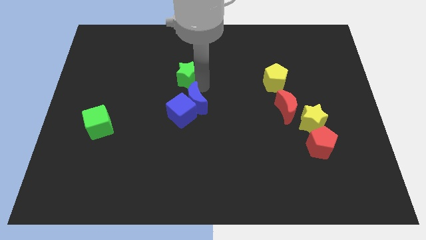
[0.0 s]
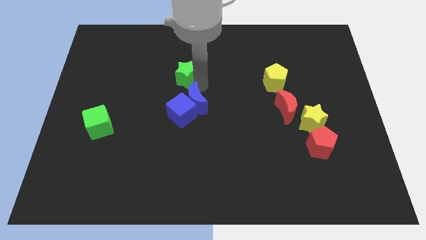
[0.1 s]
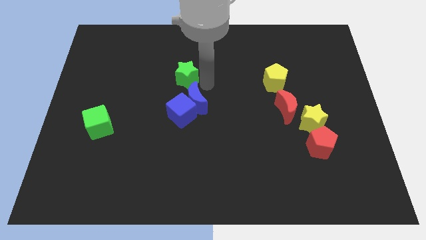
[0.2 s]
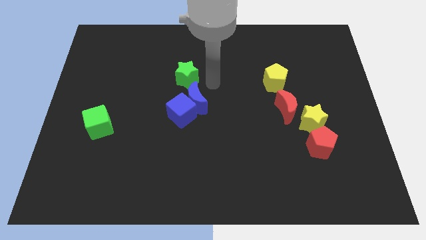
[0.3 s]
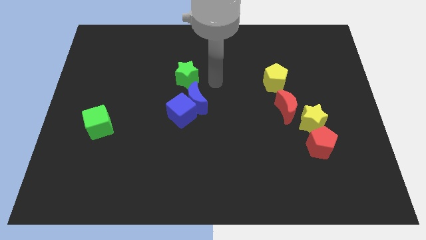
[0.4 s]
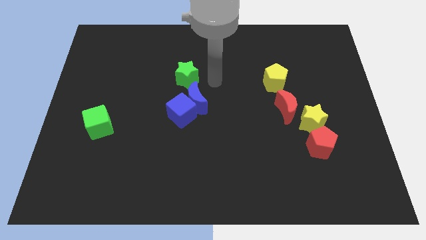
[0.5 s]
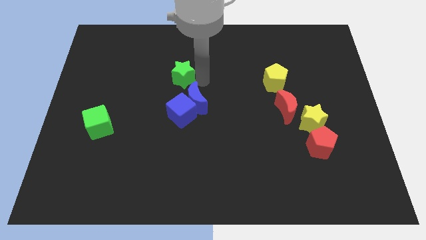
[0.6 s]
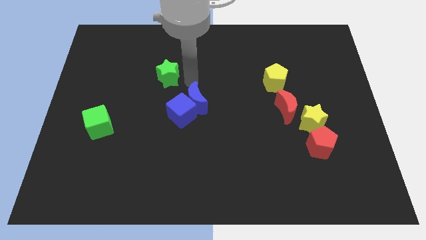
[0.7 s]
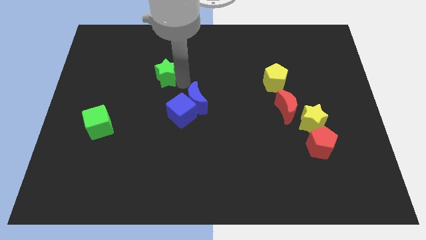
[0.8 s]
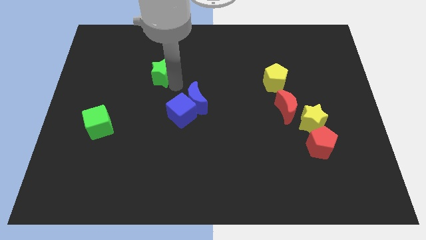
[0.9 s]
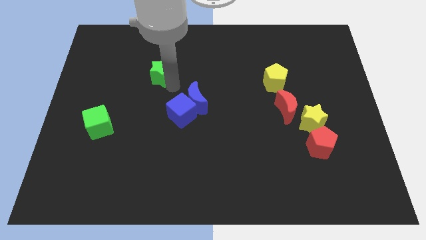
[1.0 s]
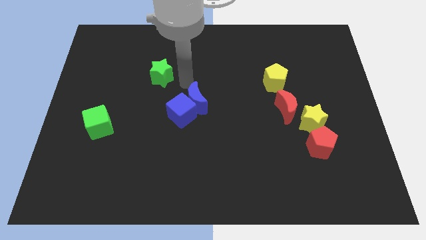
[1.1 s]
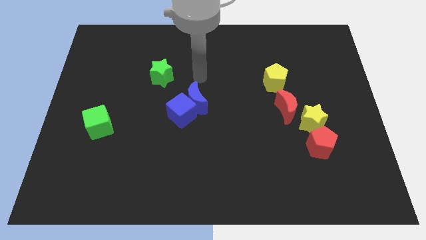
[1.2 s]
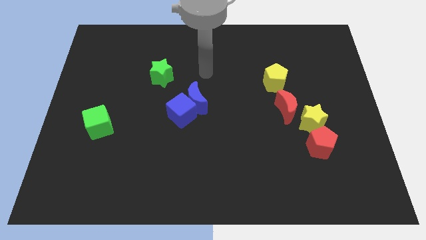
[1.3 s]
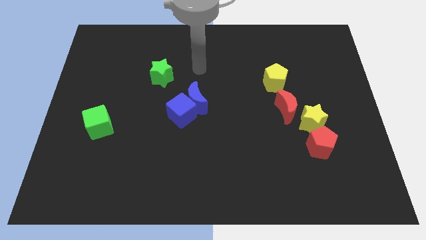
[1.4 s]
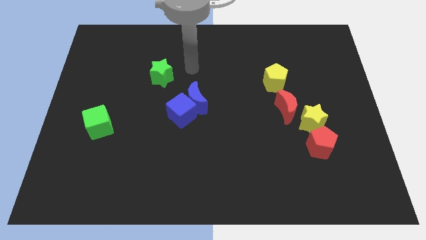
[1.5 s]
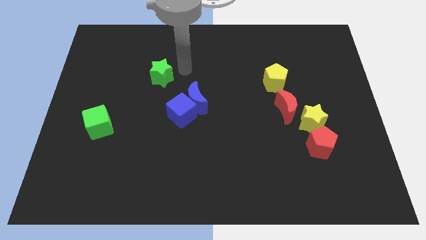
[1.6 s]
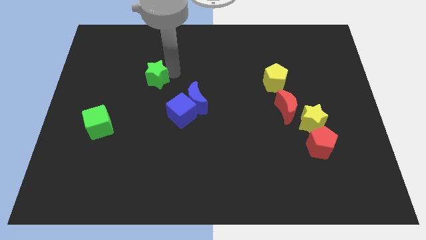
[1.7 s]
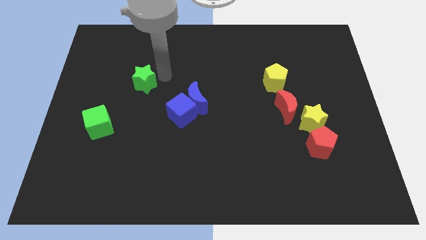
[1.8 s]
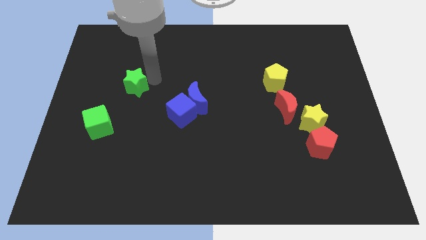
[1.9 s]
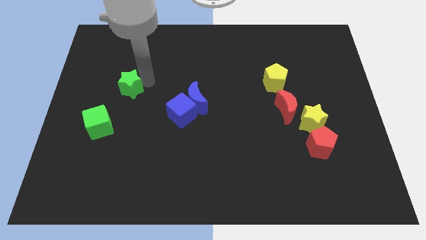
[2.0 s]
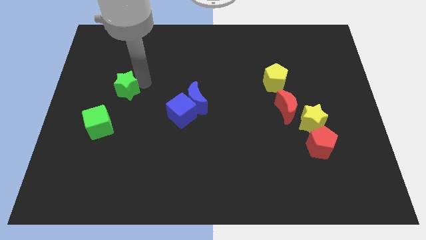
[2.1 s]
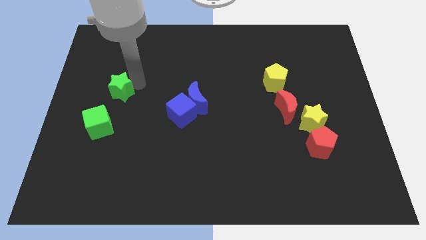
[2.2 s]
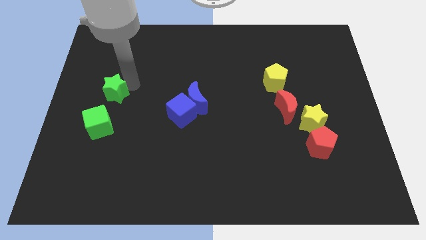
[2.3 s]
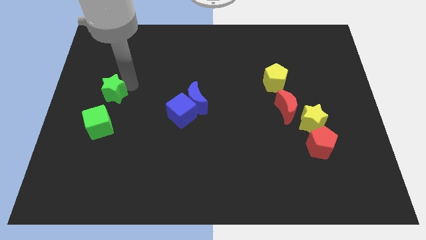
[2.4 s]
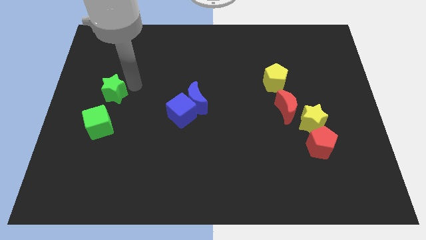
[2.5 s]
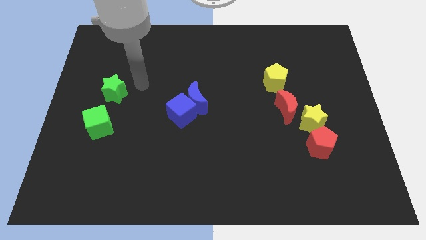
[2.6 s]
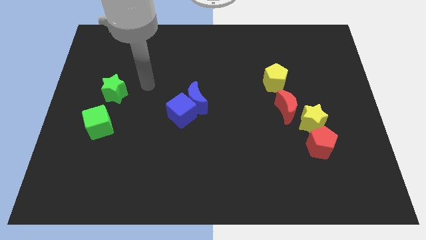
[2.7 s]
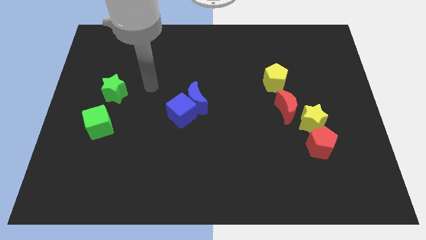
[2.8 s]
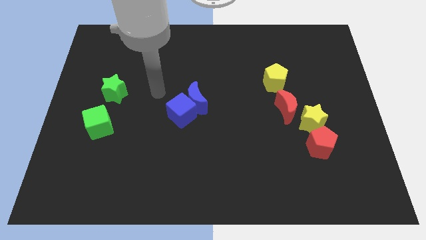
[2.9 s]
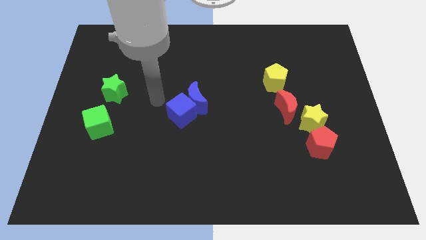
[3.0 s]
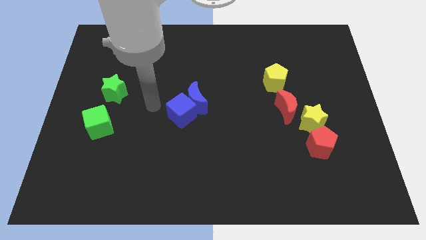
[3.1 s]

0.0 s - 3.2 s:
place green star on top of green cube

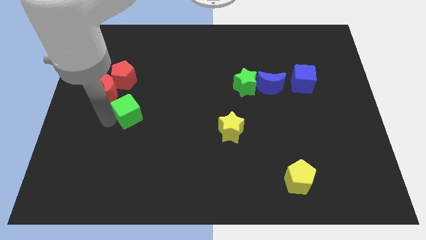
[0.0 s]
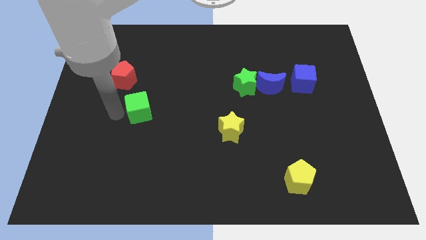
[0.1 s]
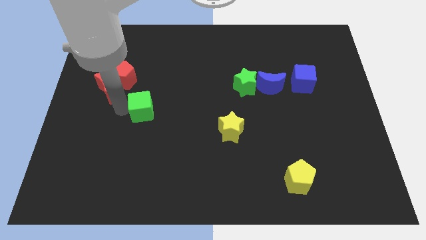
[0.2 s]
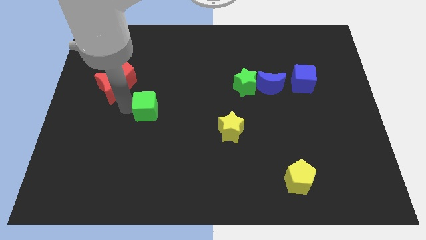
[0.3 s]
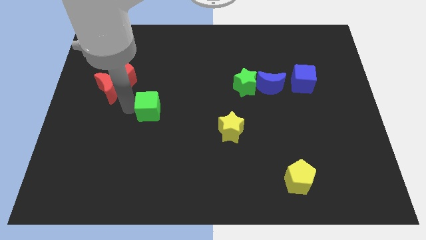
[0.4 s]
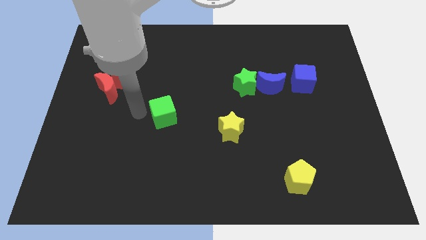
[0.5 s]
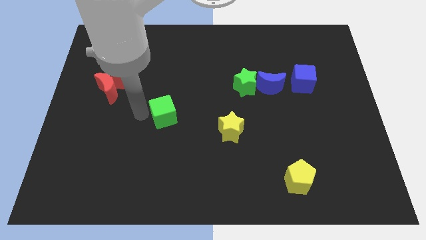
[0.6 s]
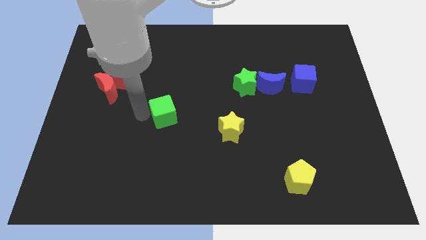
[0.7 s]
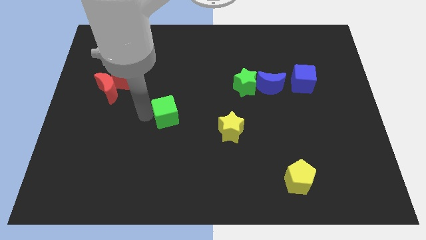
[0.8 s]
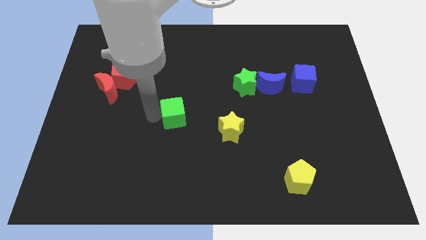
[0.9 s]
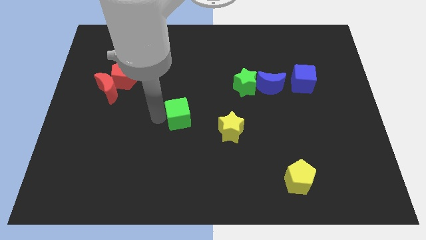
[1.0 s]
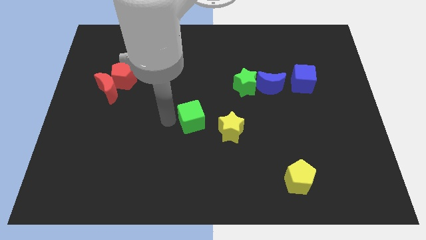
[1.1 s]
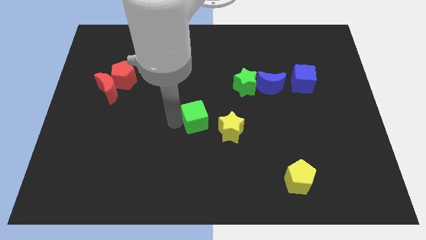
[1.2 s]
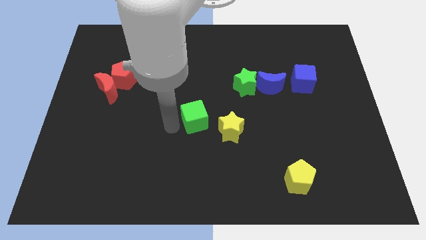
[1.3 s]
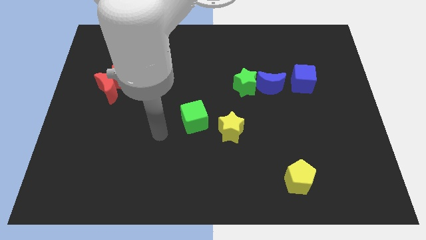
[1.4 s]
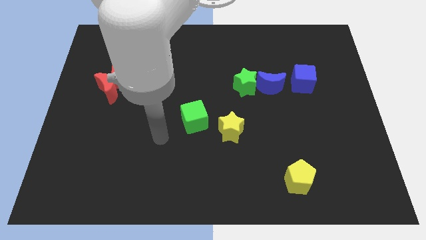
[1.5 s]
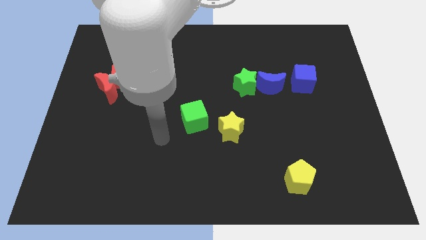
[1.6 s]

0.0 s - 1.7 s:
push the green cube to the top left side of the yellow star

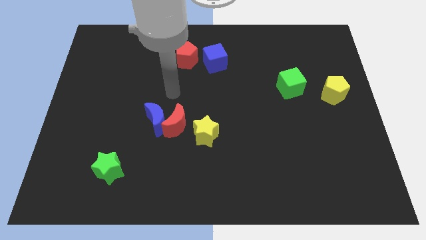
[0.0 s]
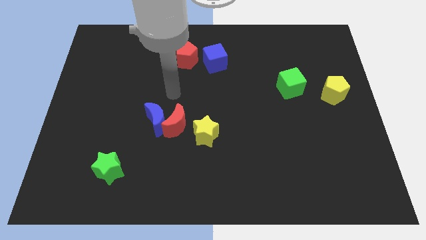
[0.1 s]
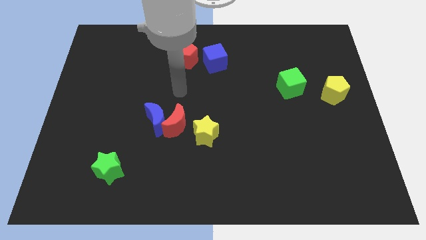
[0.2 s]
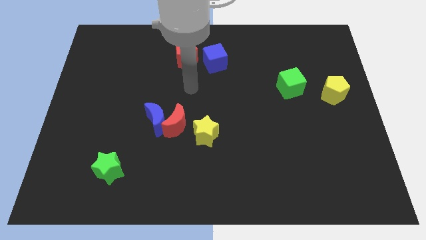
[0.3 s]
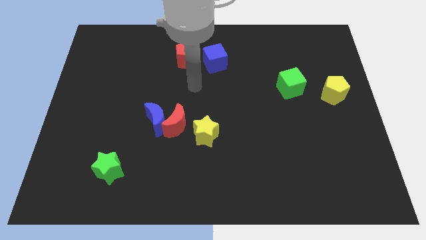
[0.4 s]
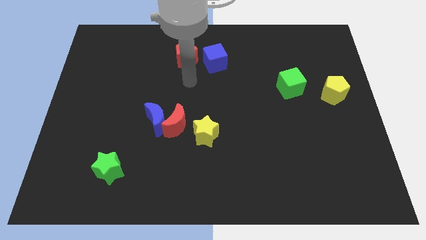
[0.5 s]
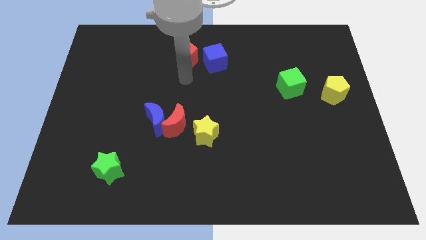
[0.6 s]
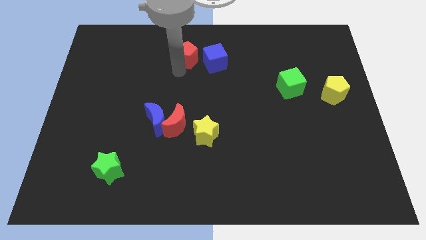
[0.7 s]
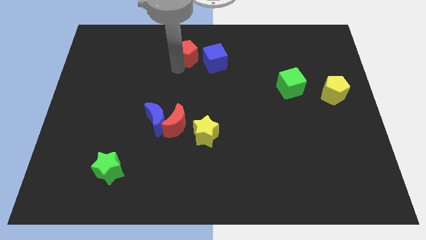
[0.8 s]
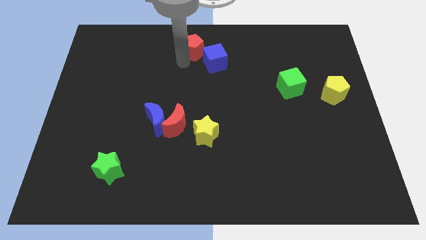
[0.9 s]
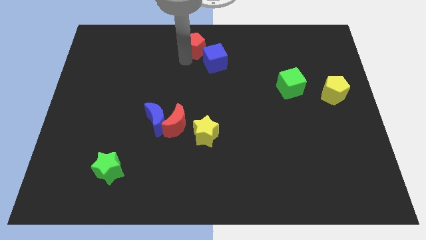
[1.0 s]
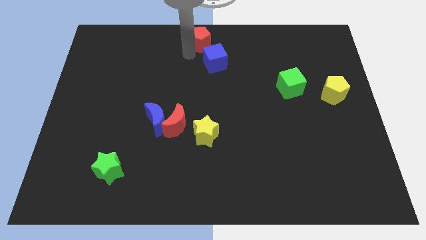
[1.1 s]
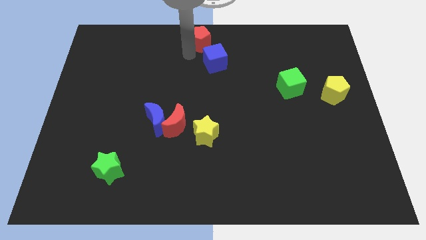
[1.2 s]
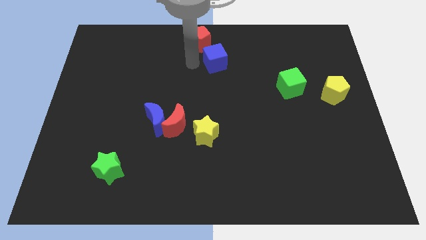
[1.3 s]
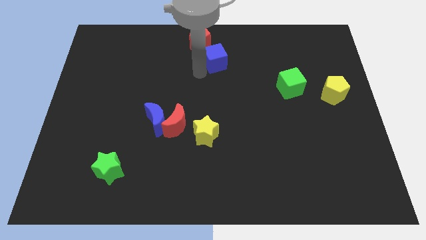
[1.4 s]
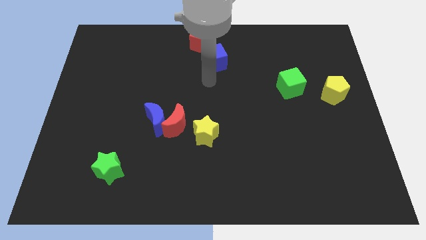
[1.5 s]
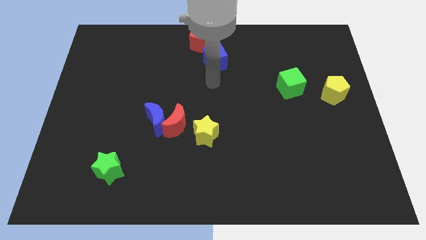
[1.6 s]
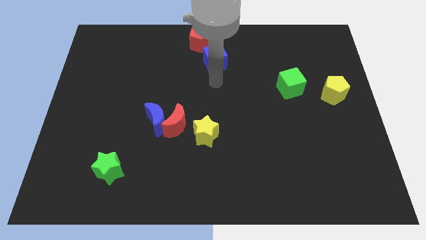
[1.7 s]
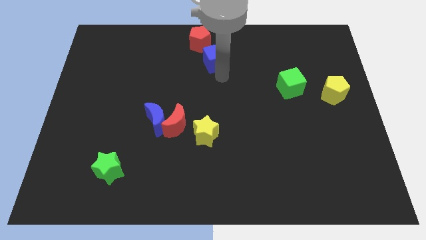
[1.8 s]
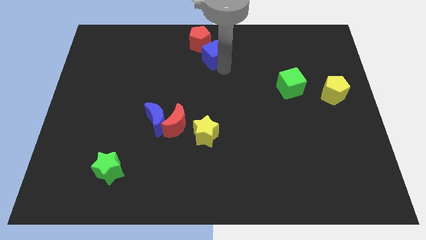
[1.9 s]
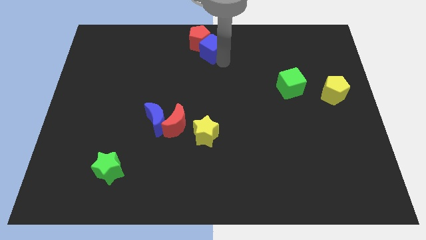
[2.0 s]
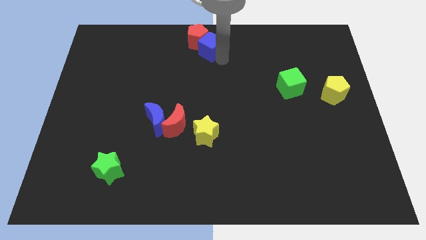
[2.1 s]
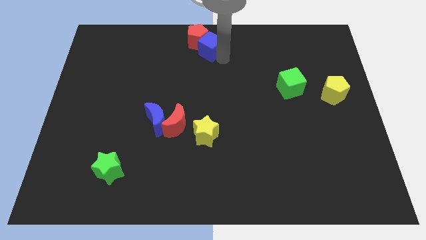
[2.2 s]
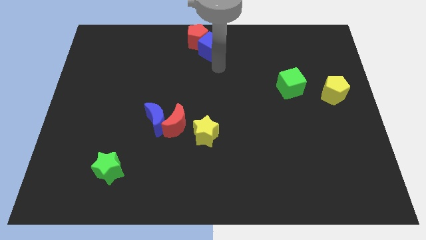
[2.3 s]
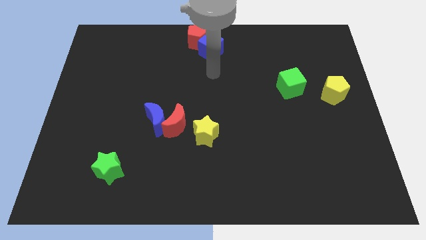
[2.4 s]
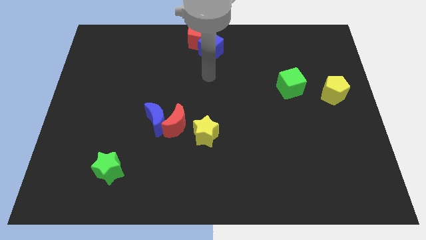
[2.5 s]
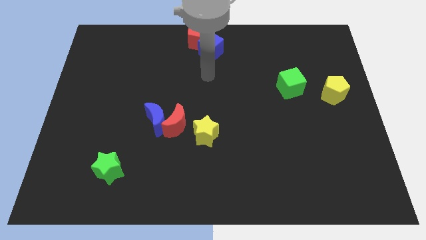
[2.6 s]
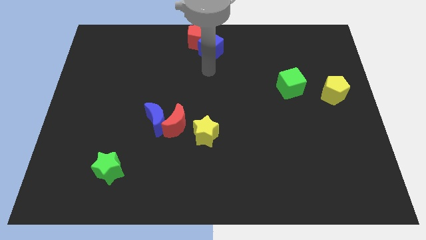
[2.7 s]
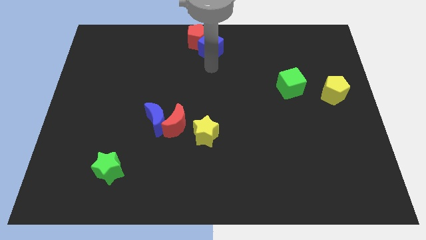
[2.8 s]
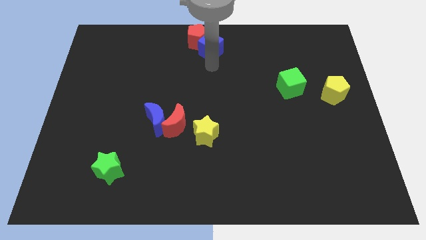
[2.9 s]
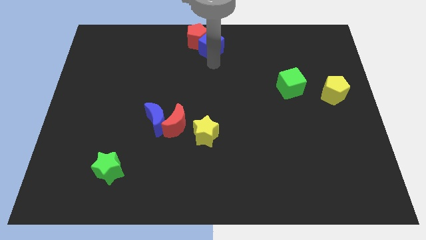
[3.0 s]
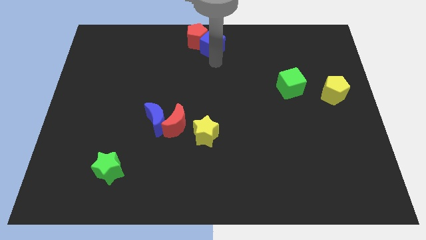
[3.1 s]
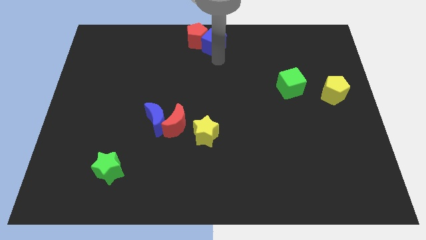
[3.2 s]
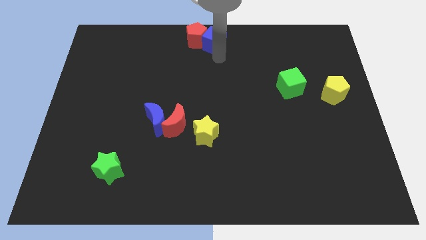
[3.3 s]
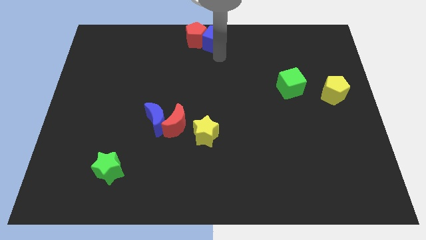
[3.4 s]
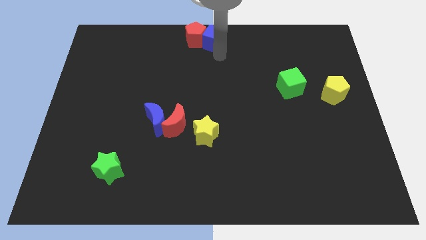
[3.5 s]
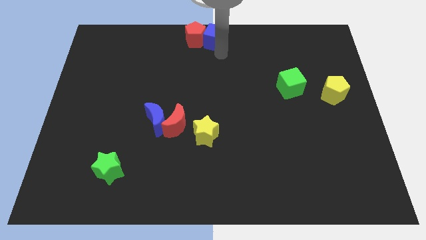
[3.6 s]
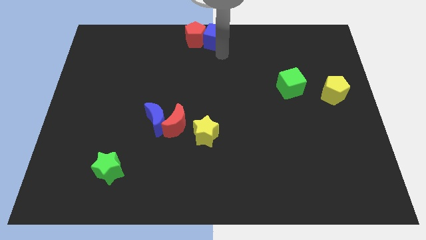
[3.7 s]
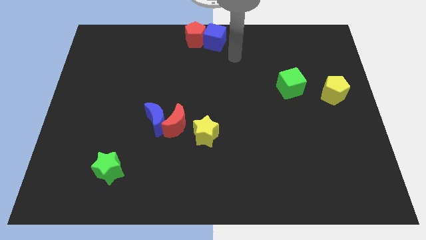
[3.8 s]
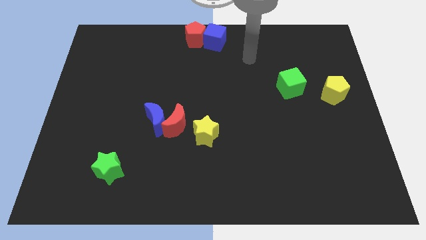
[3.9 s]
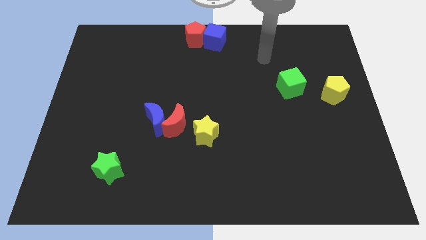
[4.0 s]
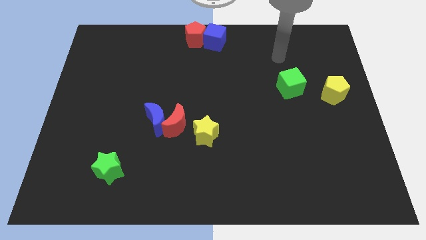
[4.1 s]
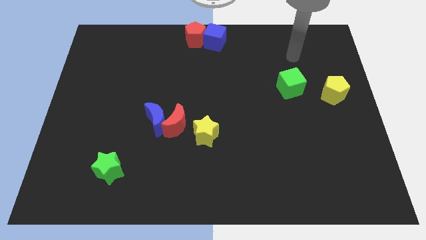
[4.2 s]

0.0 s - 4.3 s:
move the red pentagon and blue cube to the top center
